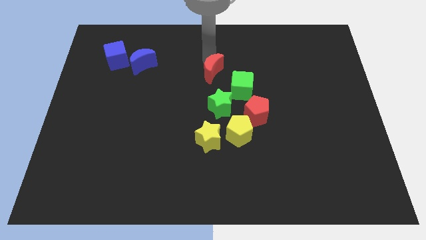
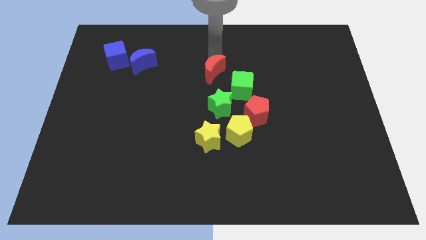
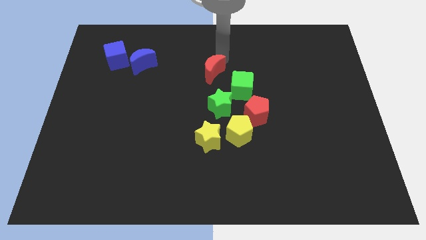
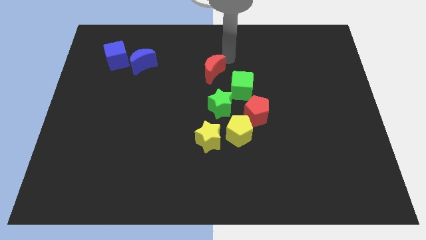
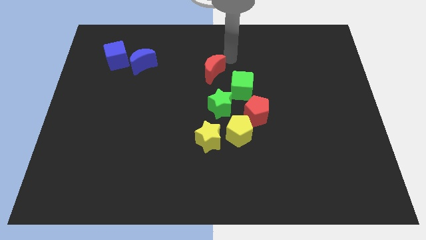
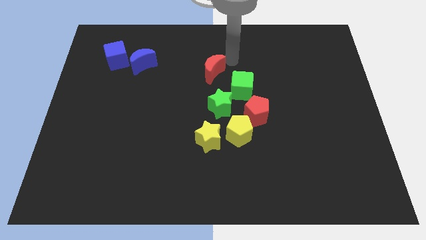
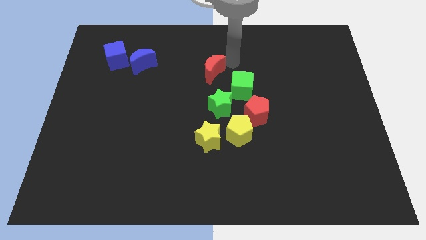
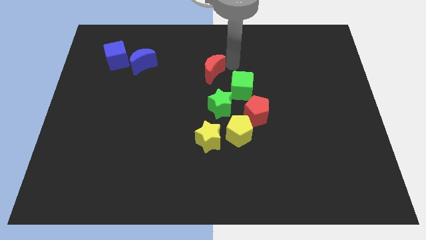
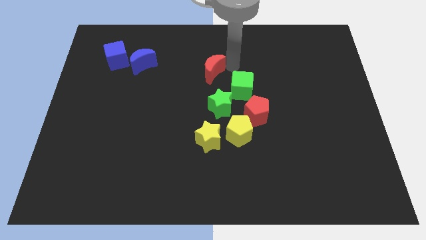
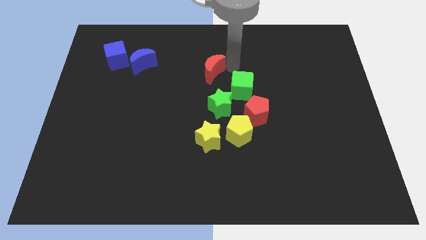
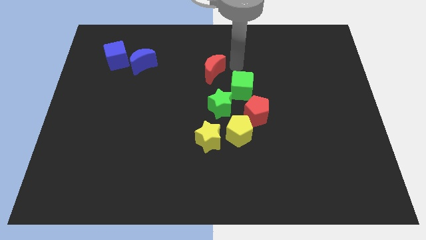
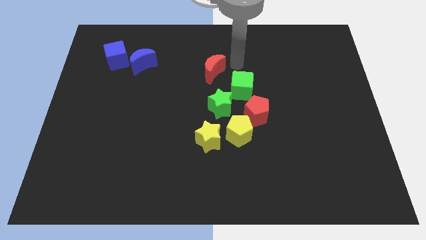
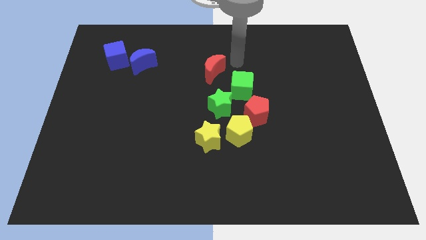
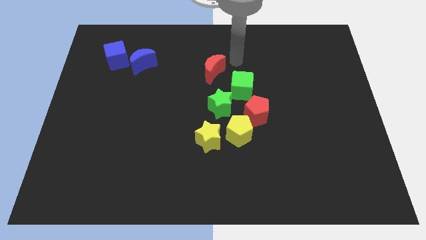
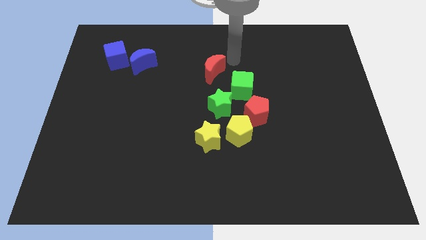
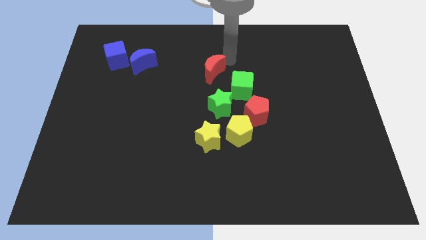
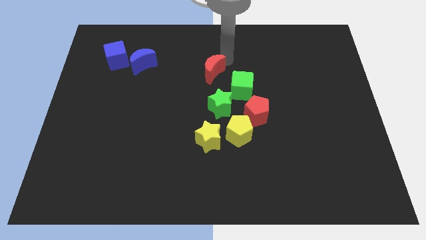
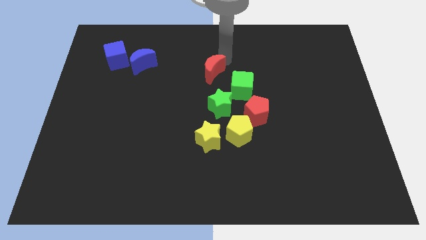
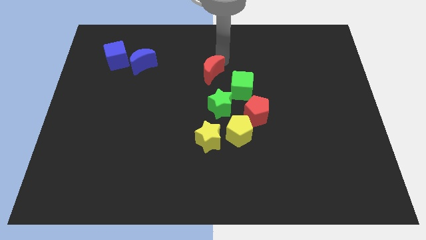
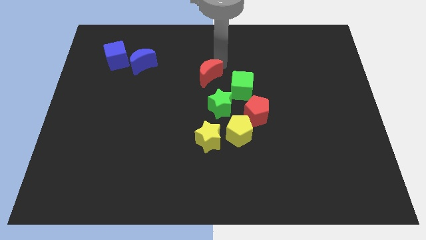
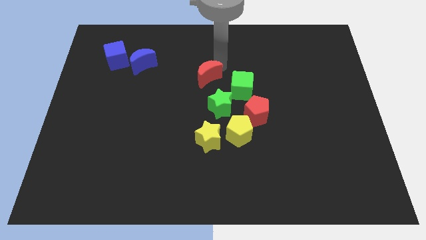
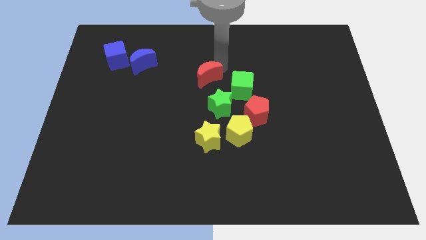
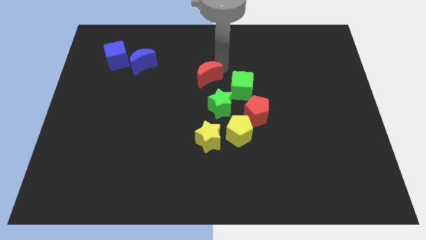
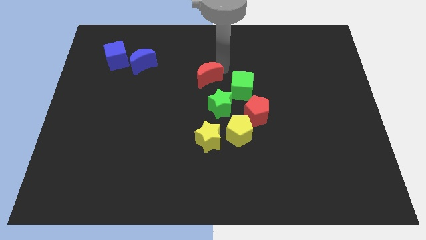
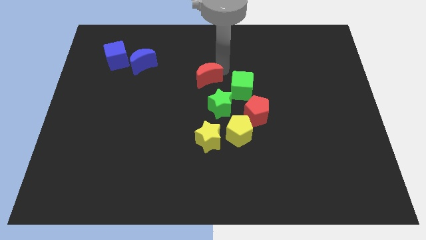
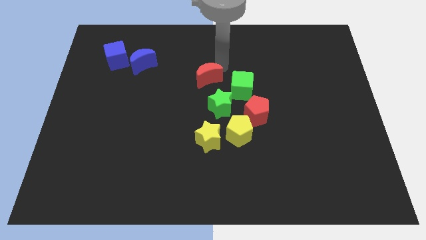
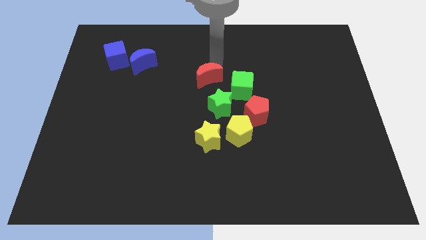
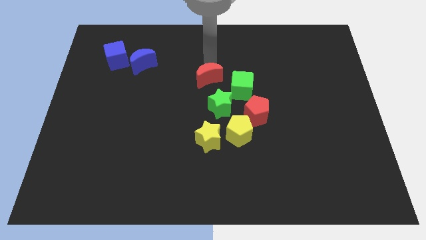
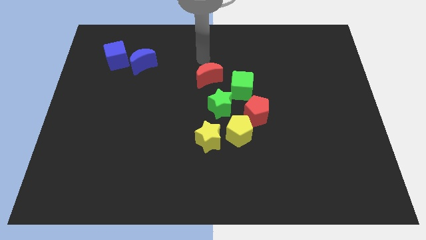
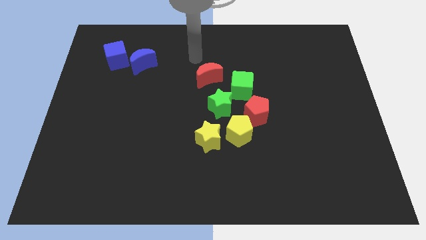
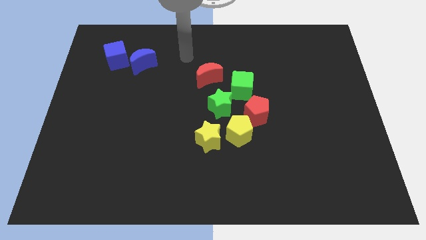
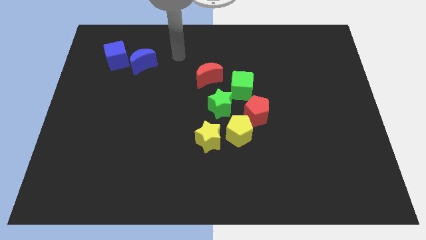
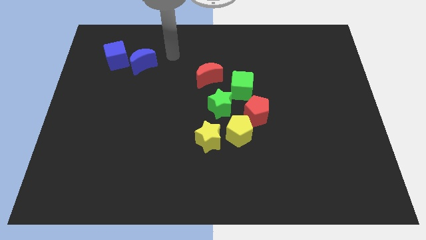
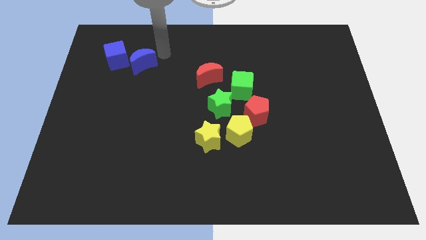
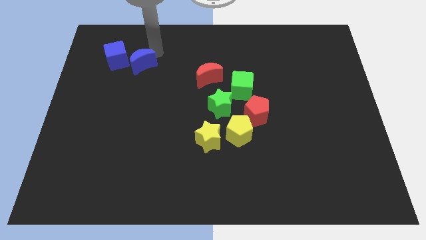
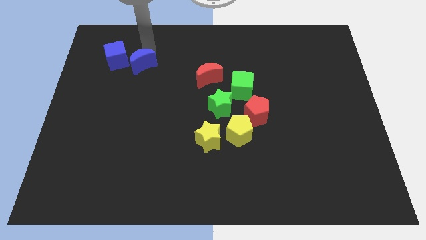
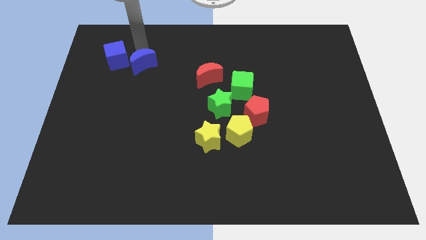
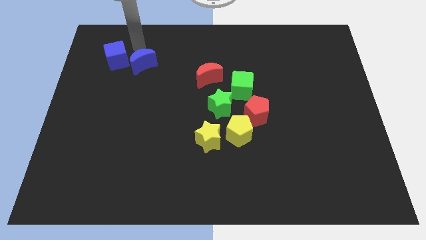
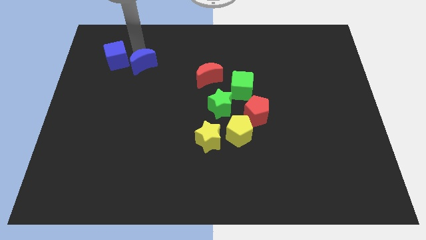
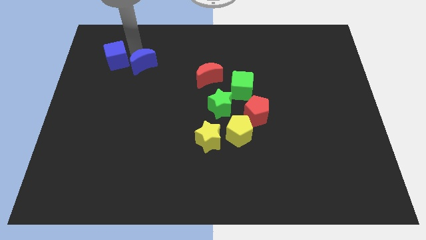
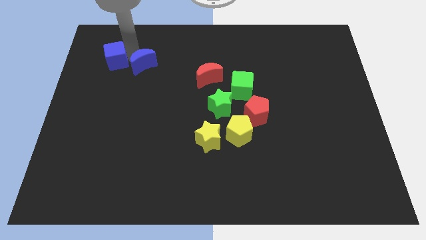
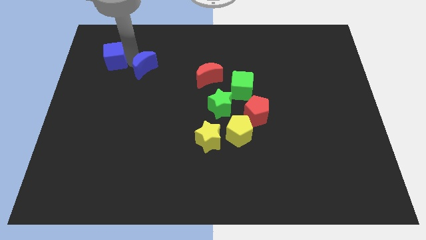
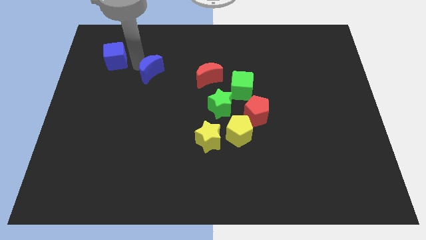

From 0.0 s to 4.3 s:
separate the blue moon and blue cube

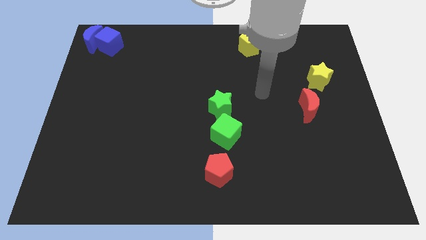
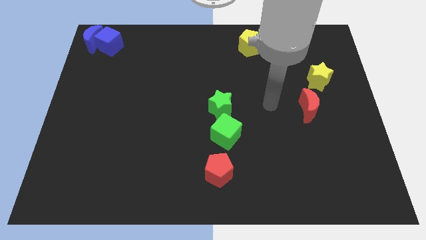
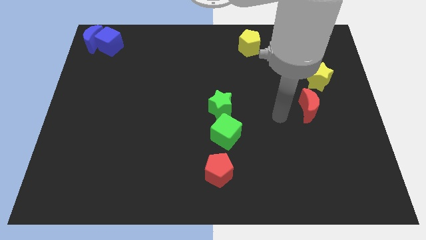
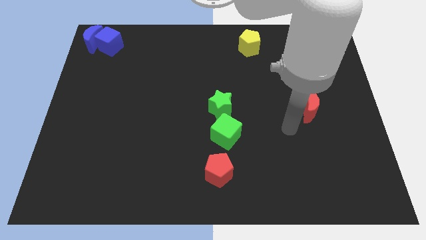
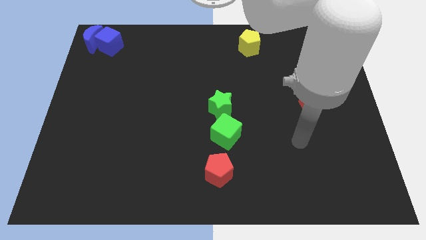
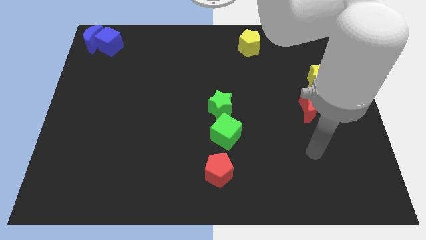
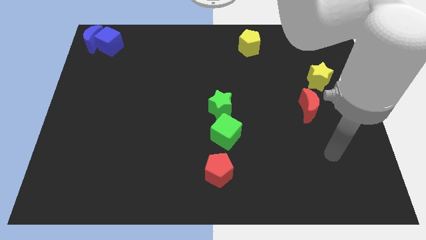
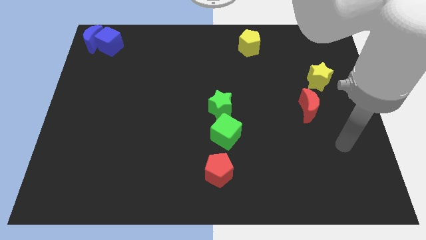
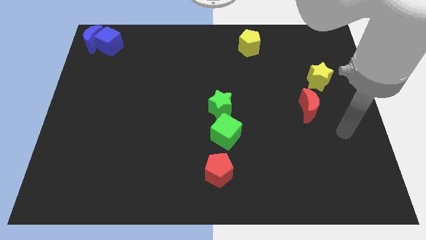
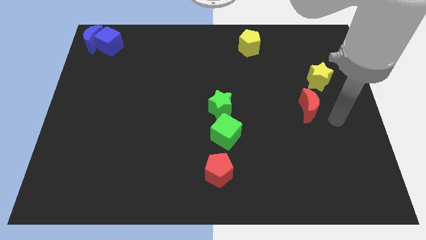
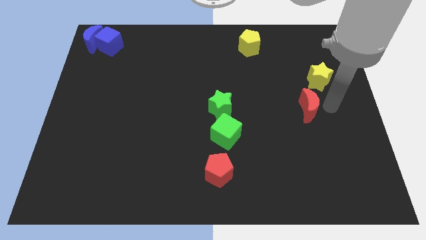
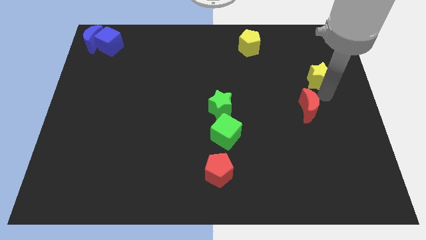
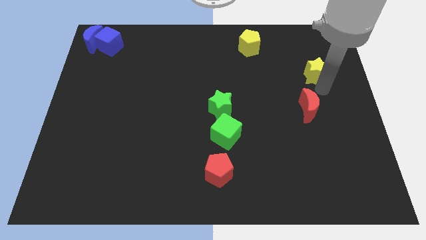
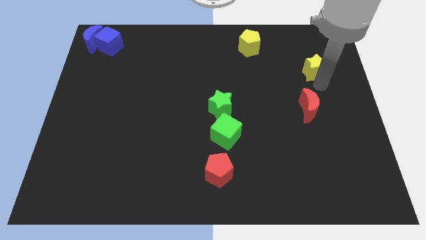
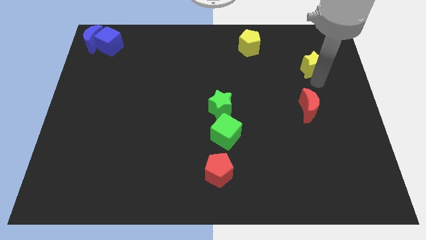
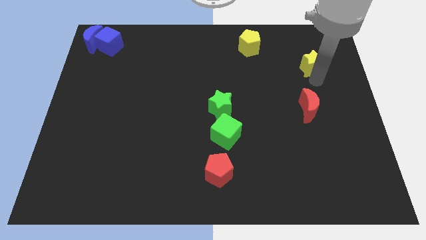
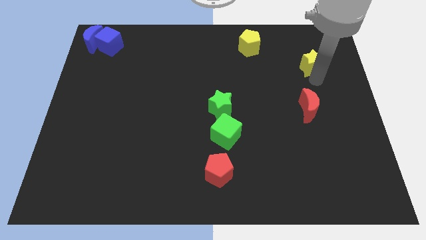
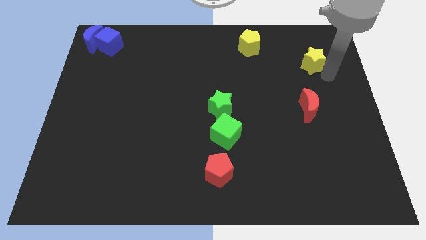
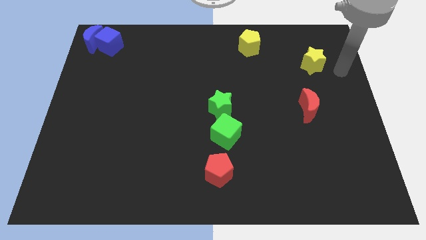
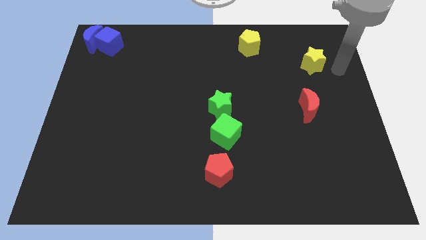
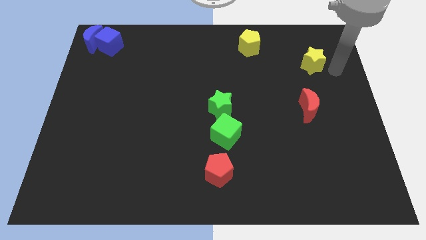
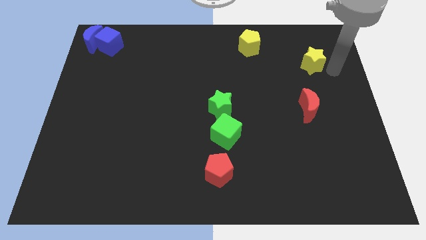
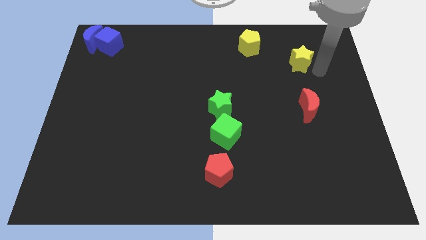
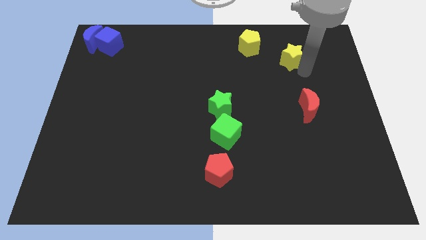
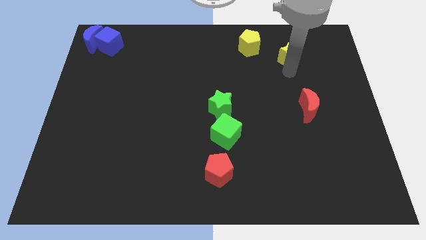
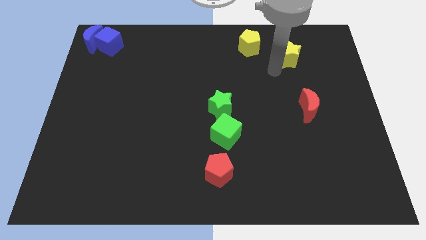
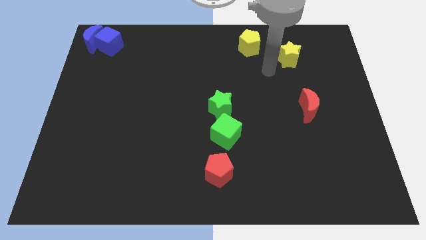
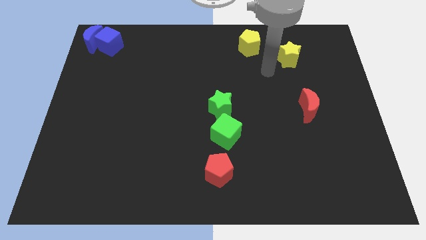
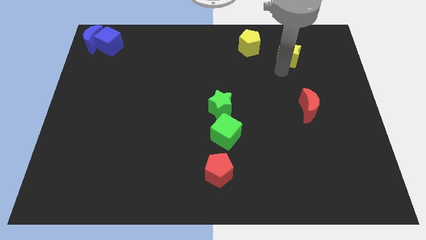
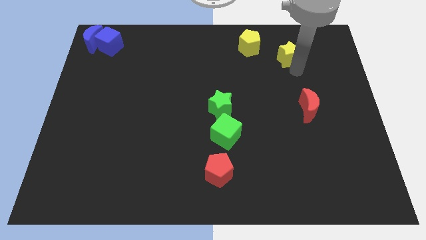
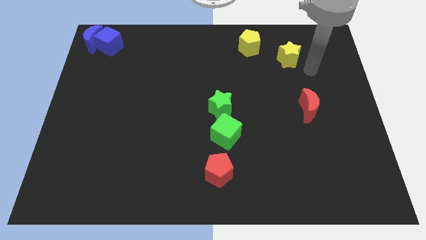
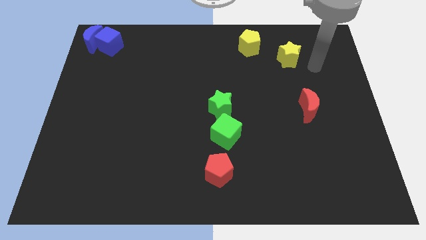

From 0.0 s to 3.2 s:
push the yellow star towards center top

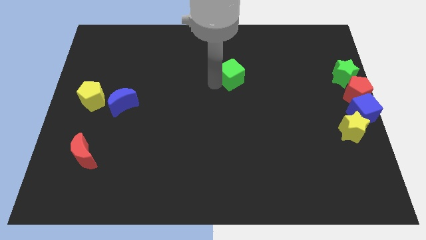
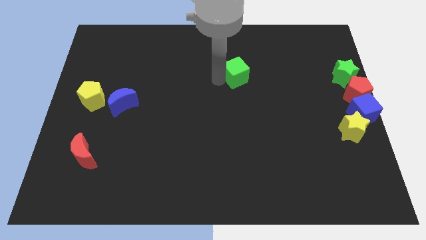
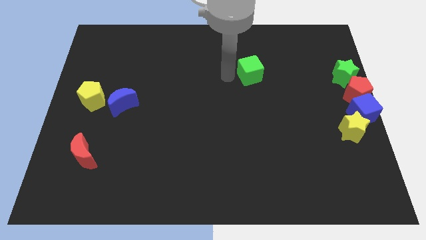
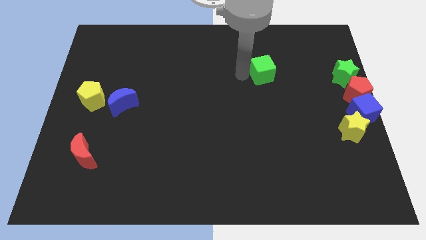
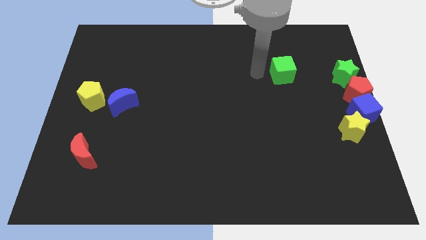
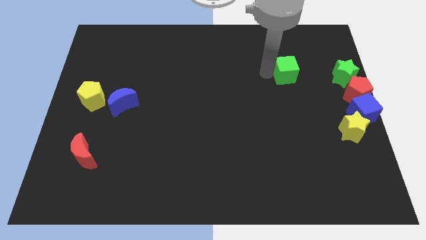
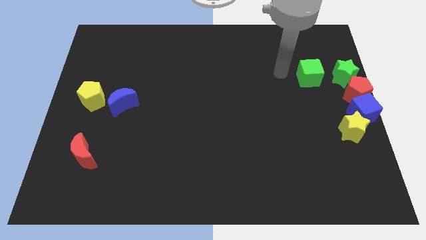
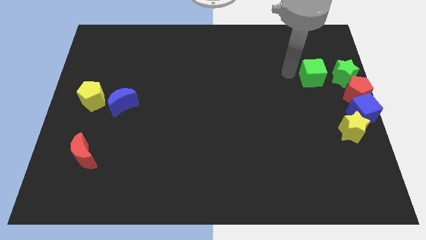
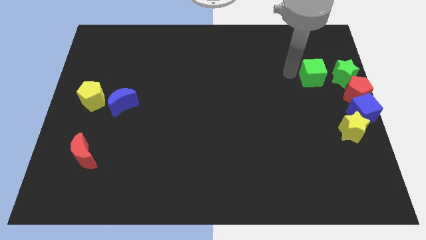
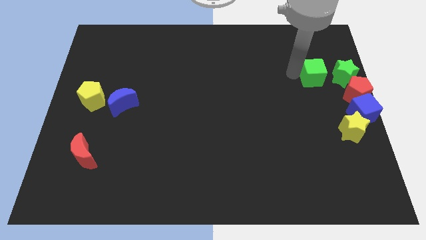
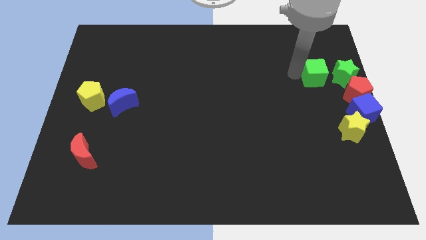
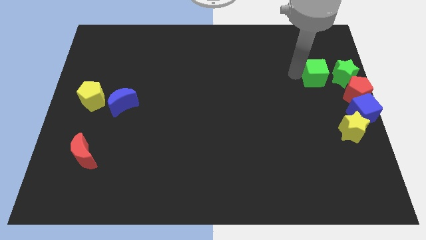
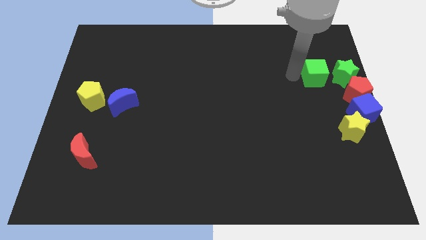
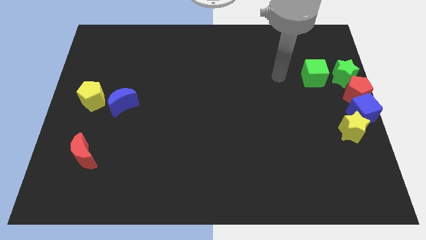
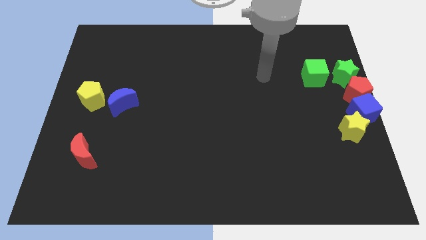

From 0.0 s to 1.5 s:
move the green cube to the left of the green star
